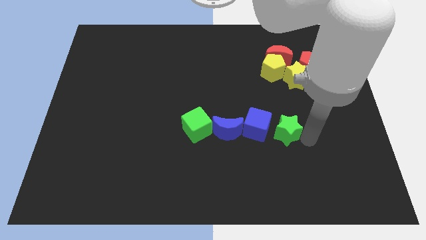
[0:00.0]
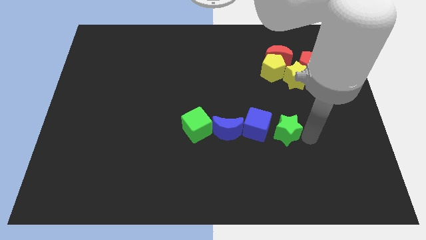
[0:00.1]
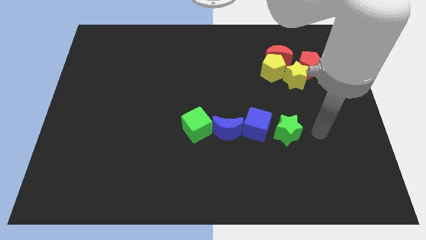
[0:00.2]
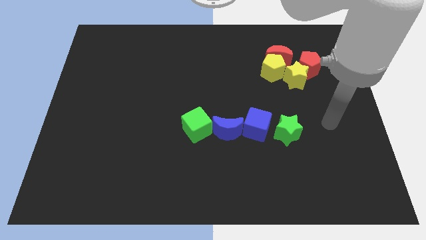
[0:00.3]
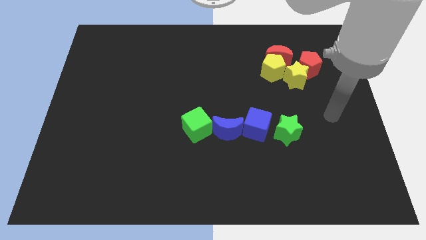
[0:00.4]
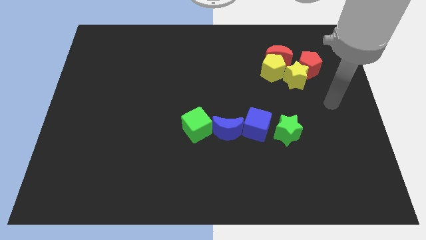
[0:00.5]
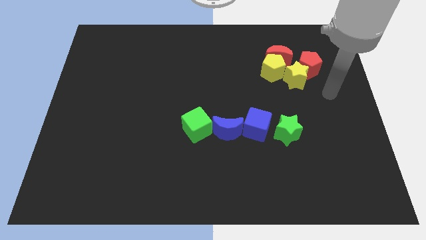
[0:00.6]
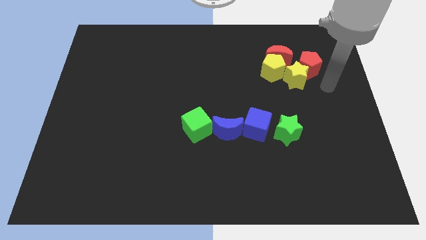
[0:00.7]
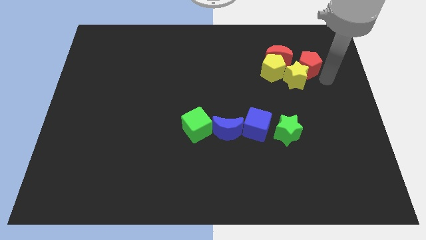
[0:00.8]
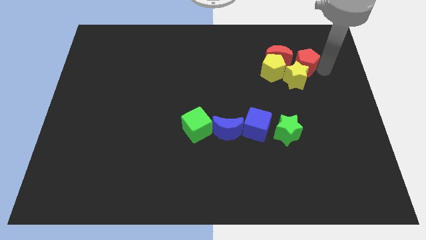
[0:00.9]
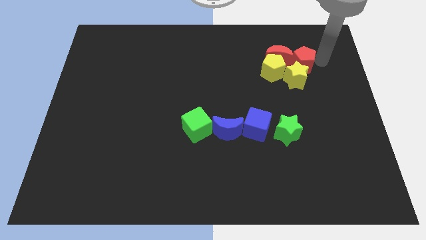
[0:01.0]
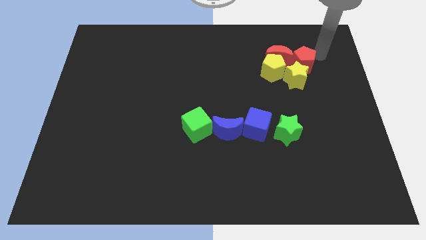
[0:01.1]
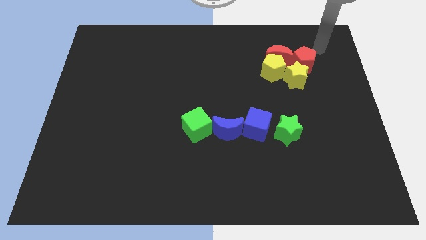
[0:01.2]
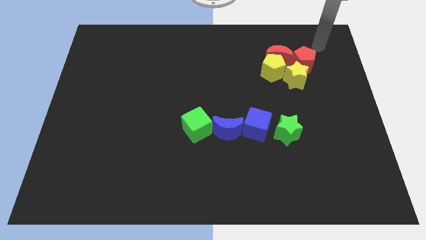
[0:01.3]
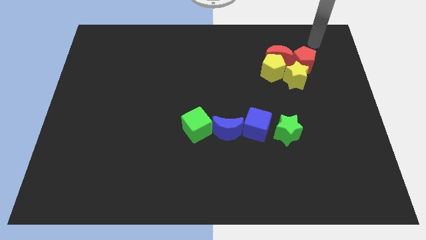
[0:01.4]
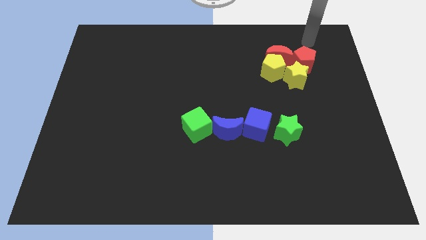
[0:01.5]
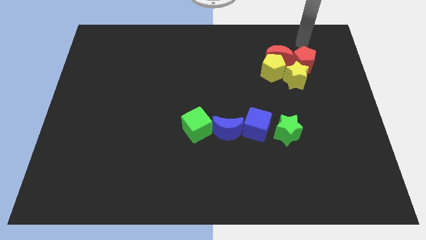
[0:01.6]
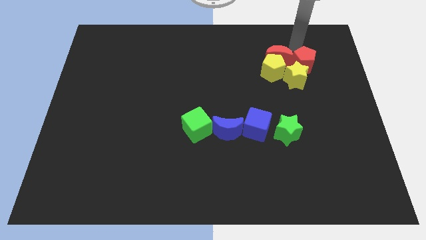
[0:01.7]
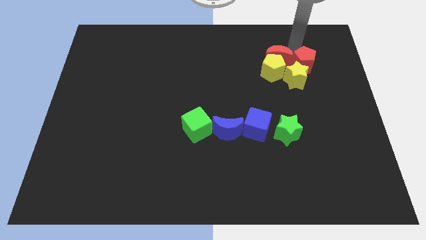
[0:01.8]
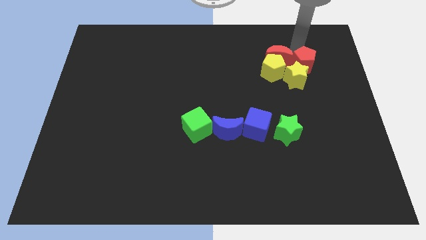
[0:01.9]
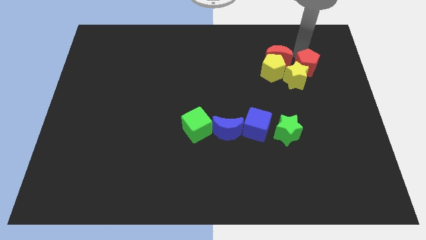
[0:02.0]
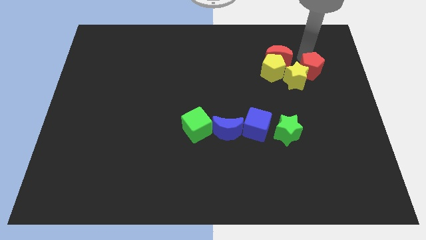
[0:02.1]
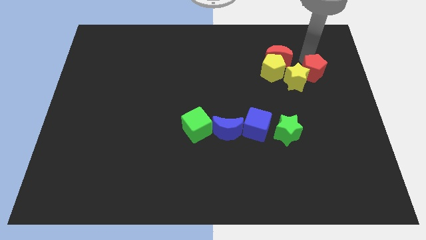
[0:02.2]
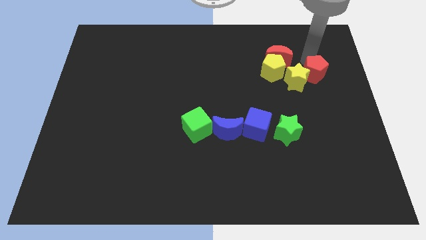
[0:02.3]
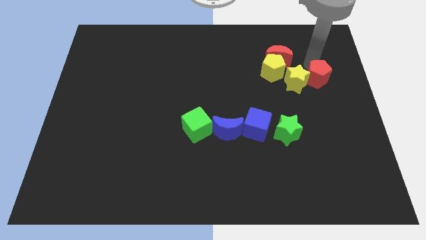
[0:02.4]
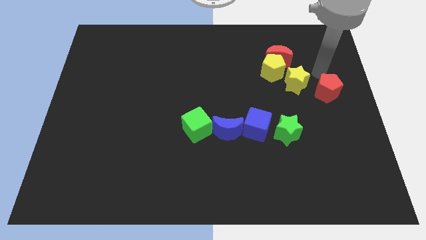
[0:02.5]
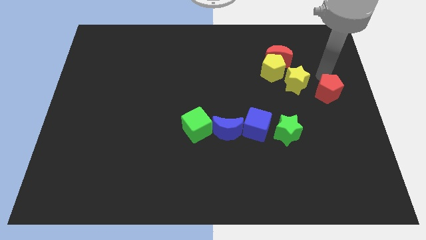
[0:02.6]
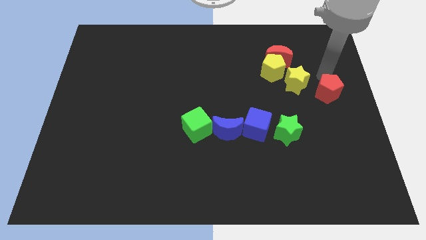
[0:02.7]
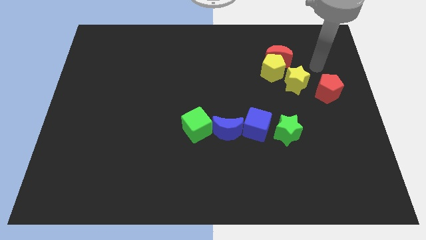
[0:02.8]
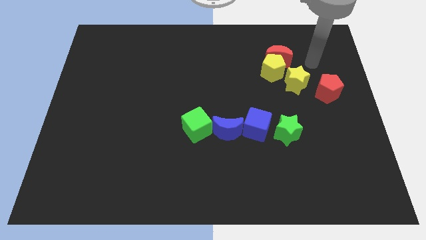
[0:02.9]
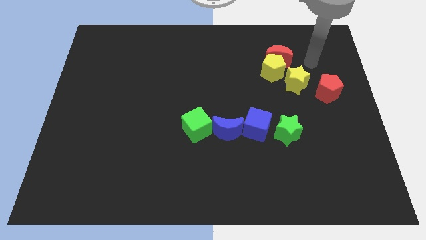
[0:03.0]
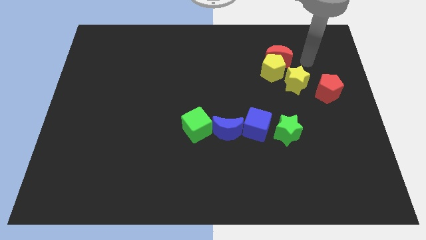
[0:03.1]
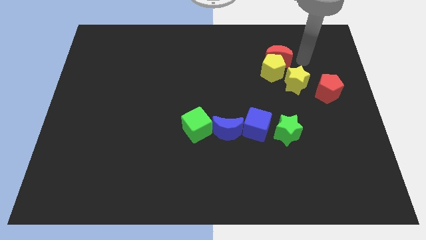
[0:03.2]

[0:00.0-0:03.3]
separate the red pentagon from the yellow star

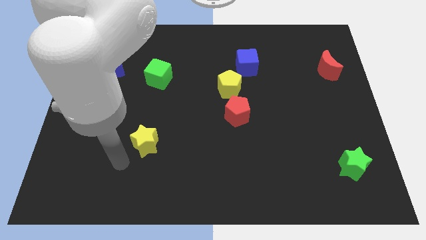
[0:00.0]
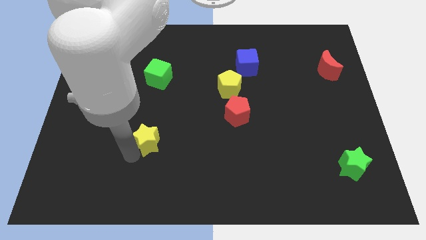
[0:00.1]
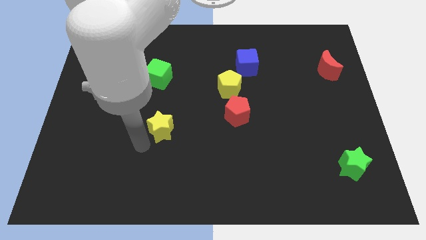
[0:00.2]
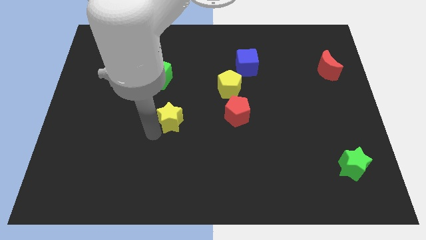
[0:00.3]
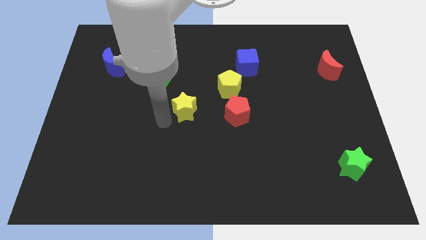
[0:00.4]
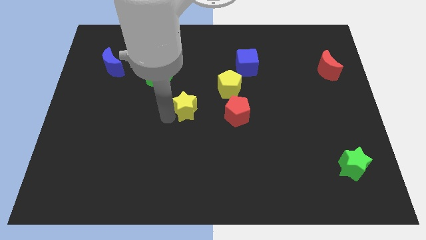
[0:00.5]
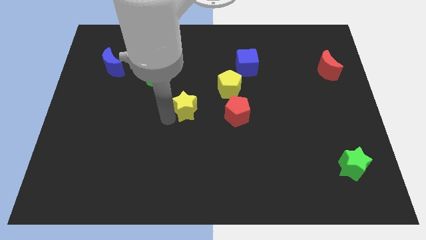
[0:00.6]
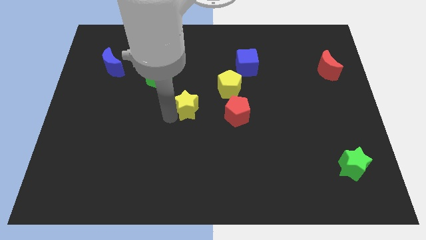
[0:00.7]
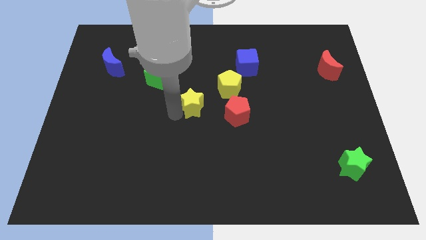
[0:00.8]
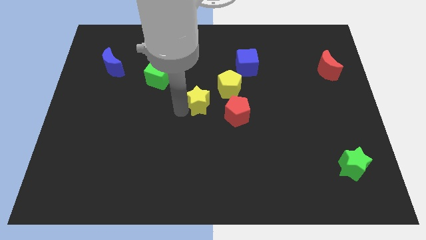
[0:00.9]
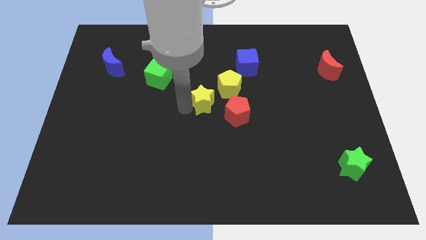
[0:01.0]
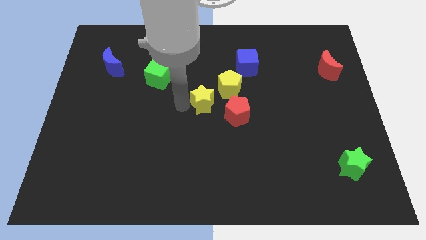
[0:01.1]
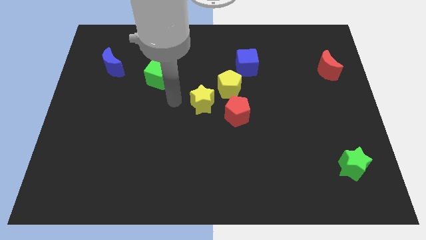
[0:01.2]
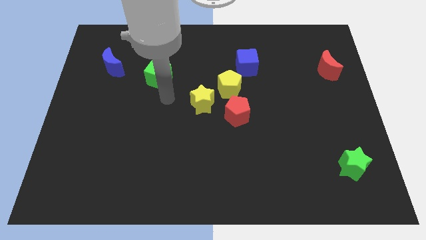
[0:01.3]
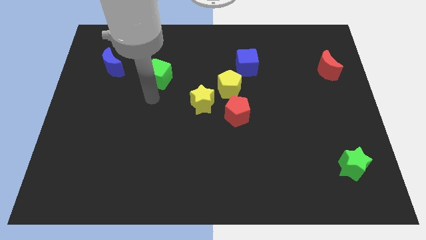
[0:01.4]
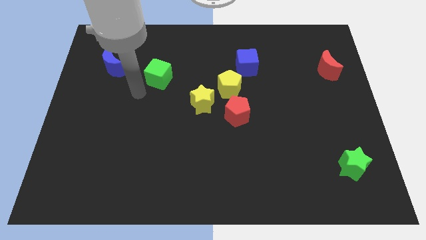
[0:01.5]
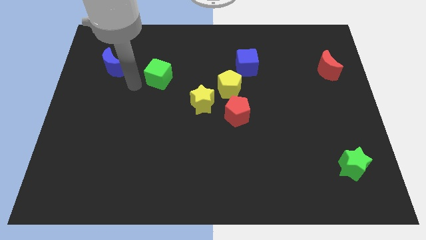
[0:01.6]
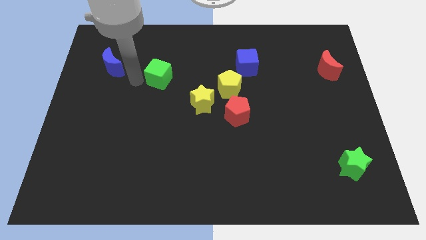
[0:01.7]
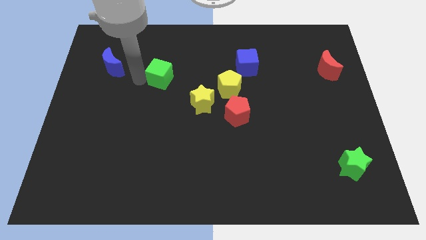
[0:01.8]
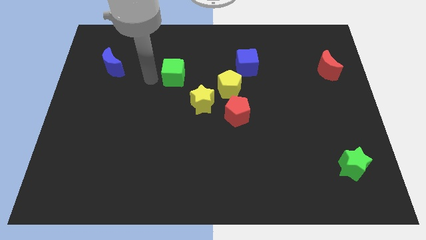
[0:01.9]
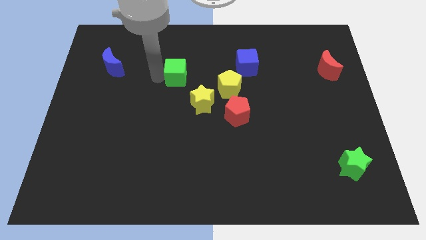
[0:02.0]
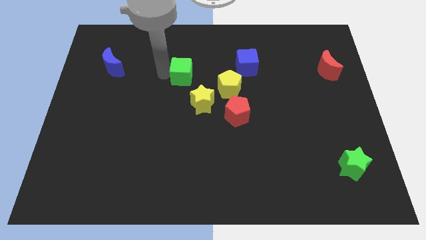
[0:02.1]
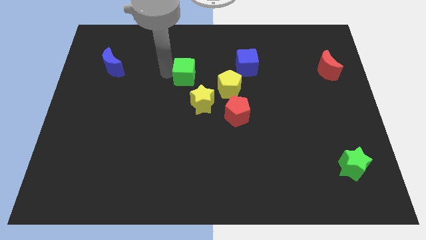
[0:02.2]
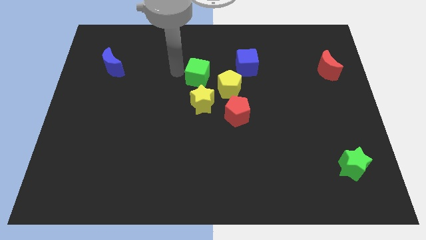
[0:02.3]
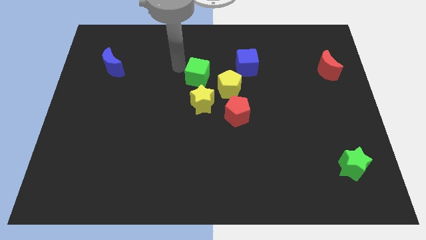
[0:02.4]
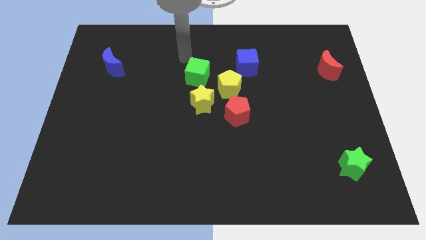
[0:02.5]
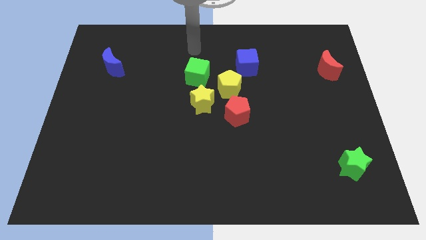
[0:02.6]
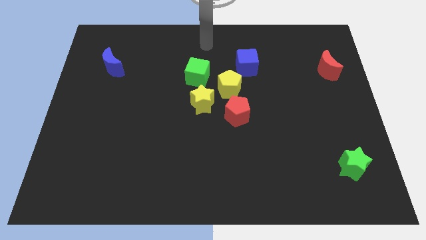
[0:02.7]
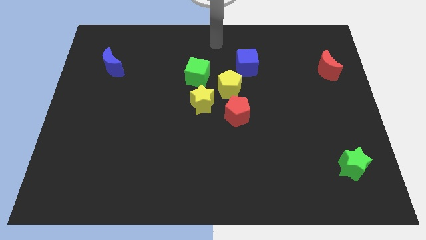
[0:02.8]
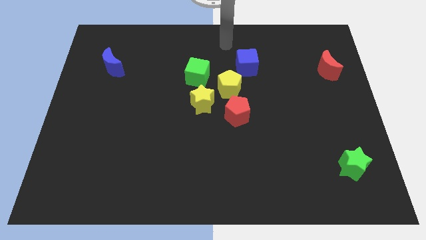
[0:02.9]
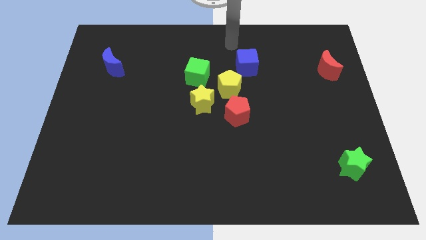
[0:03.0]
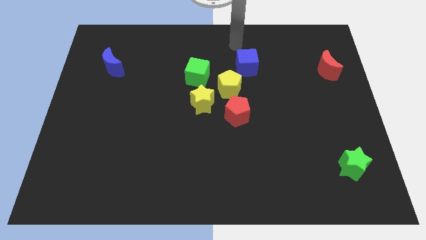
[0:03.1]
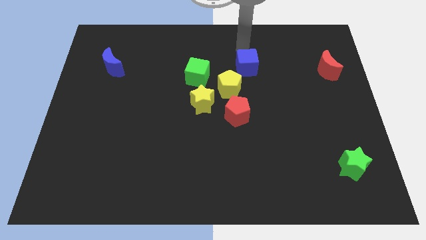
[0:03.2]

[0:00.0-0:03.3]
move yellow star and green cube towards center

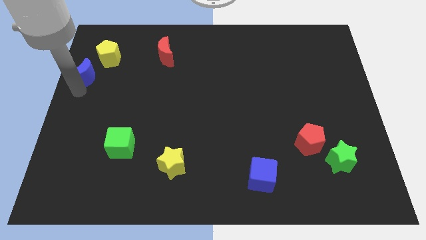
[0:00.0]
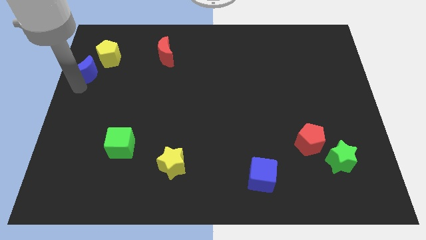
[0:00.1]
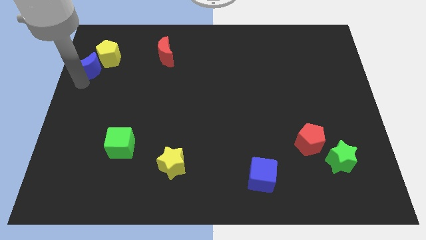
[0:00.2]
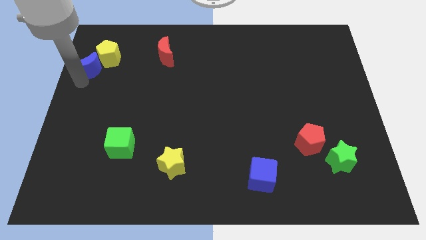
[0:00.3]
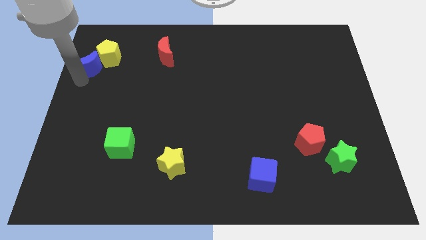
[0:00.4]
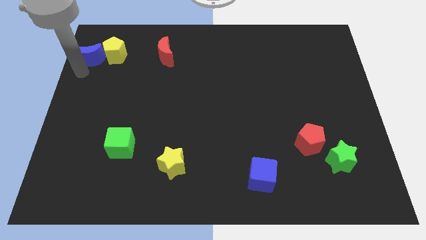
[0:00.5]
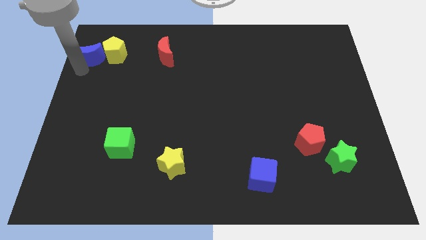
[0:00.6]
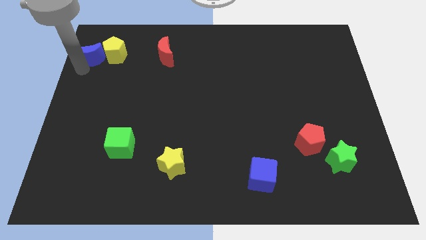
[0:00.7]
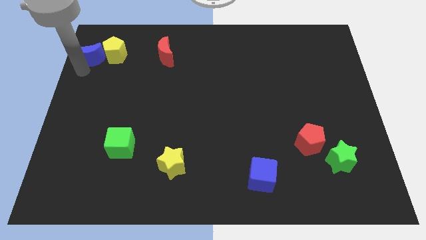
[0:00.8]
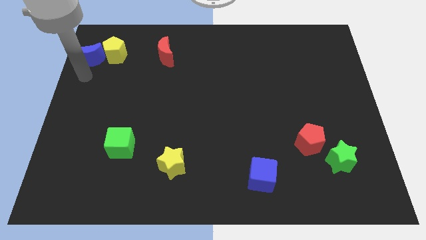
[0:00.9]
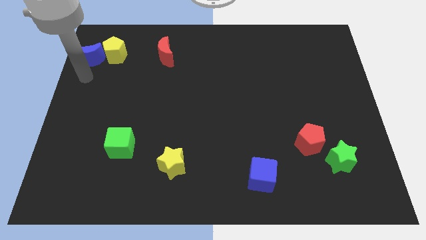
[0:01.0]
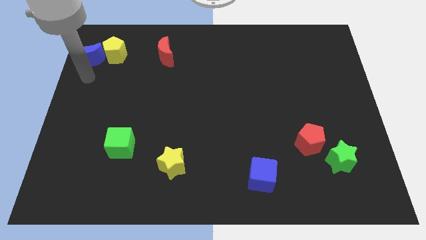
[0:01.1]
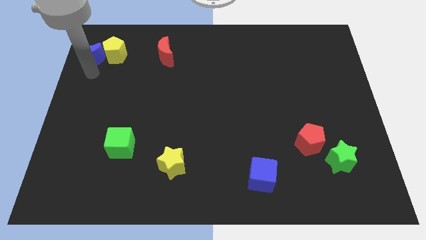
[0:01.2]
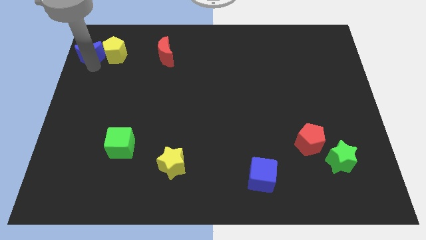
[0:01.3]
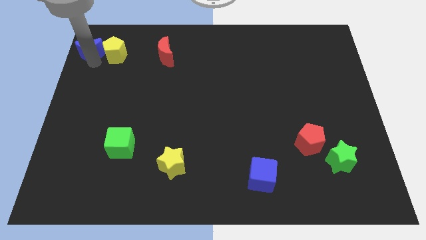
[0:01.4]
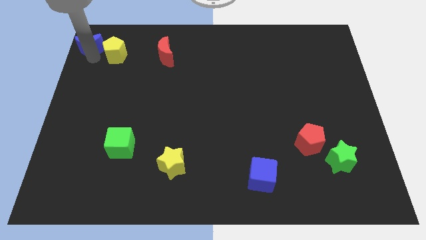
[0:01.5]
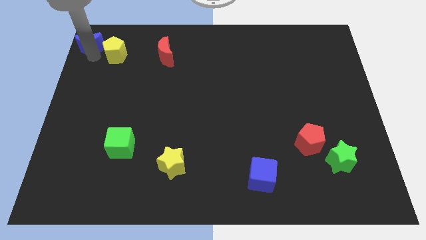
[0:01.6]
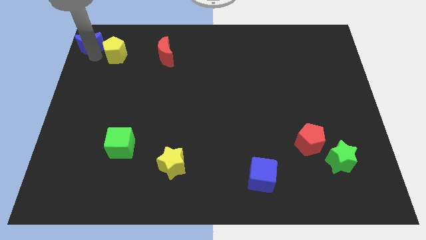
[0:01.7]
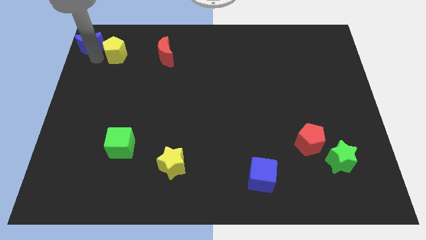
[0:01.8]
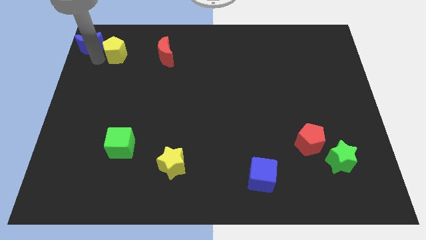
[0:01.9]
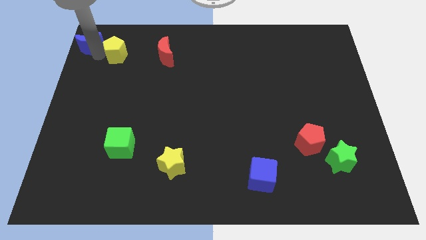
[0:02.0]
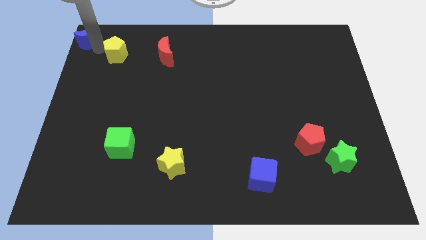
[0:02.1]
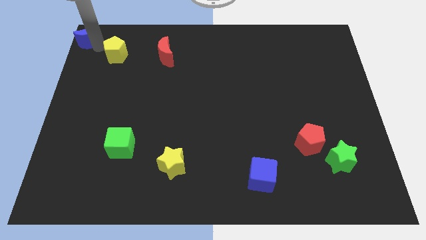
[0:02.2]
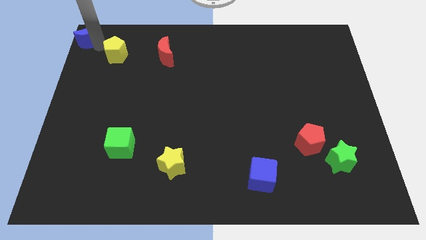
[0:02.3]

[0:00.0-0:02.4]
push the blue moon towards the top left
